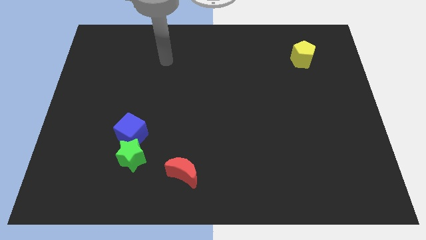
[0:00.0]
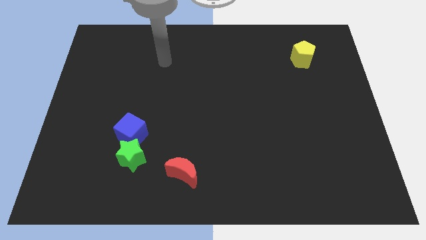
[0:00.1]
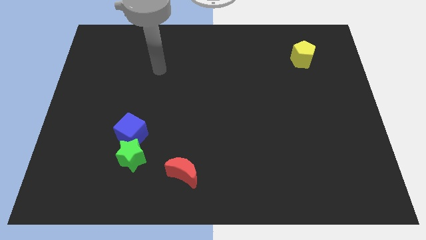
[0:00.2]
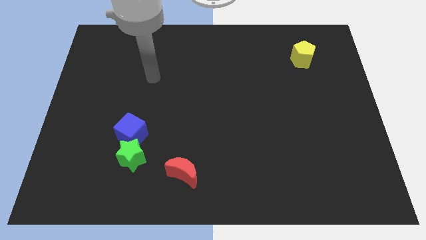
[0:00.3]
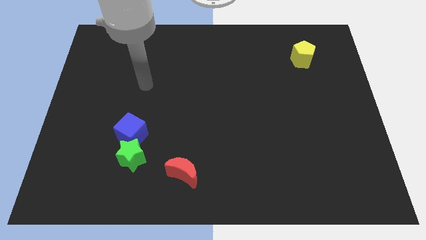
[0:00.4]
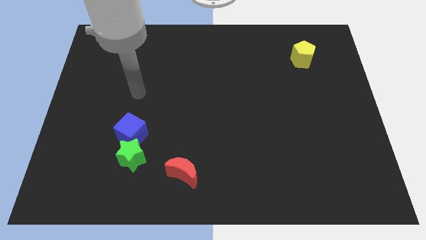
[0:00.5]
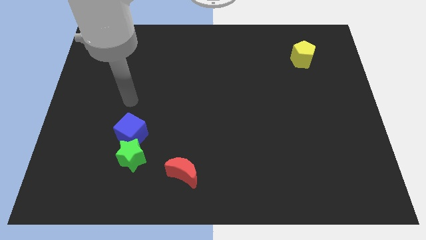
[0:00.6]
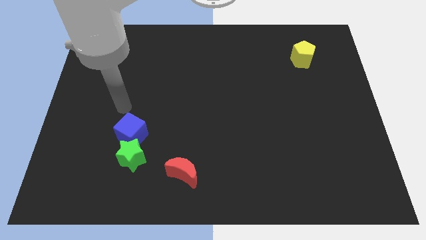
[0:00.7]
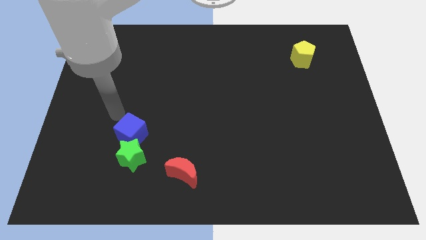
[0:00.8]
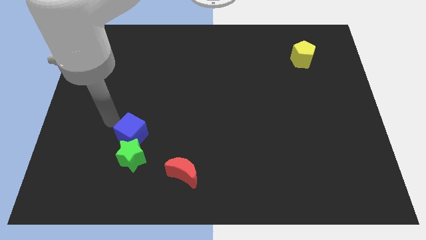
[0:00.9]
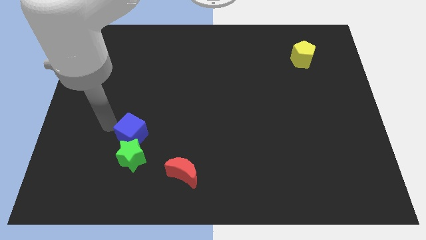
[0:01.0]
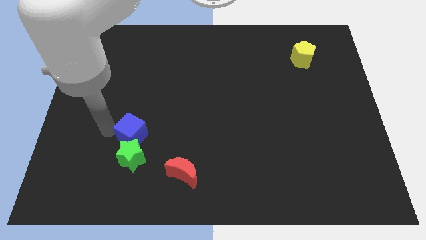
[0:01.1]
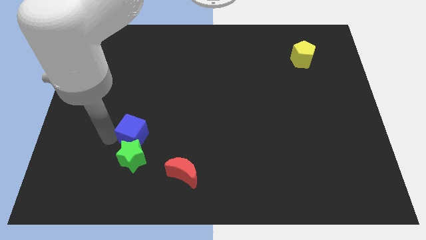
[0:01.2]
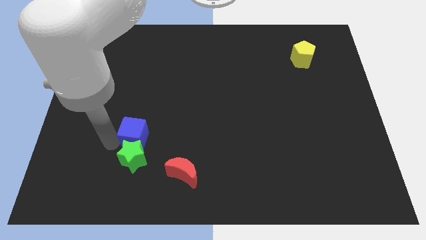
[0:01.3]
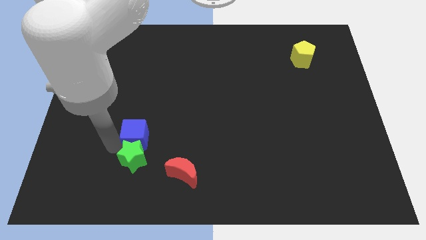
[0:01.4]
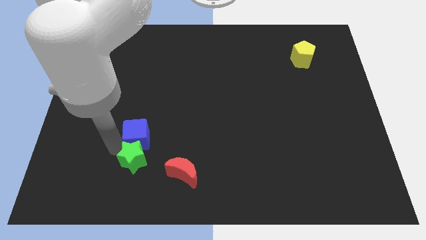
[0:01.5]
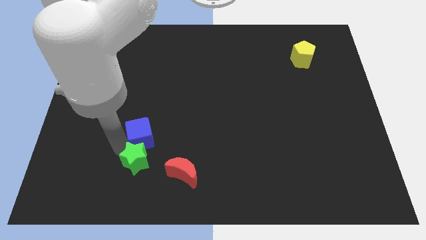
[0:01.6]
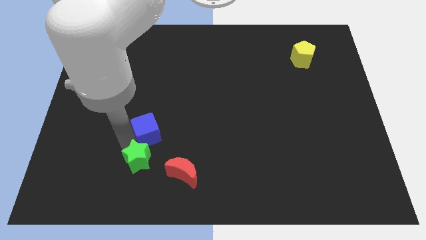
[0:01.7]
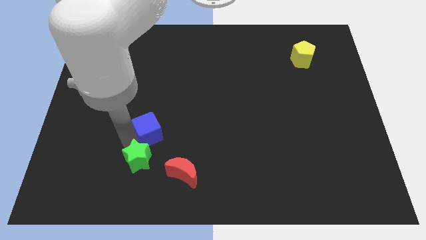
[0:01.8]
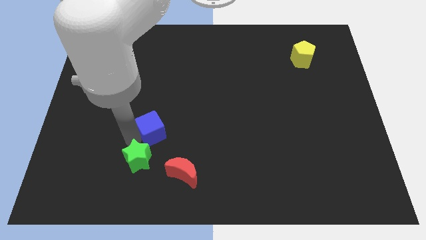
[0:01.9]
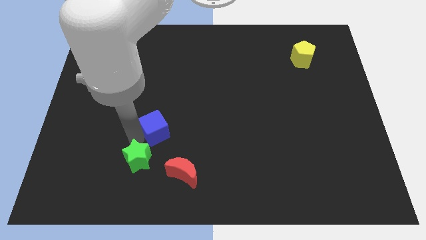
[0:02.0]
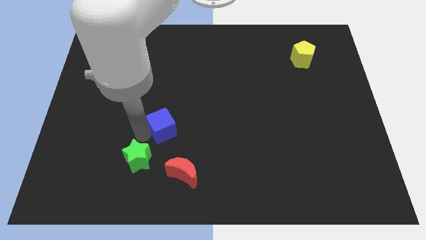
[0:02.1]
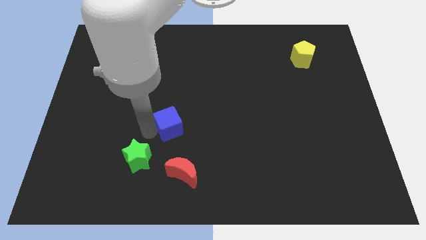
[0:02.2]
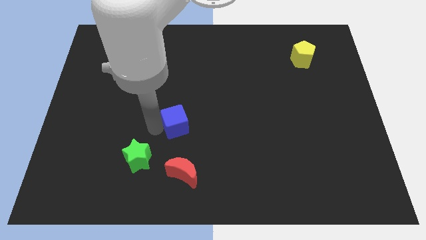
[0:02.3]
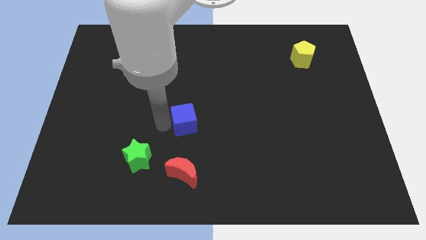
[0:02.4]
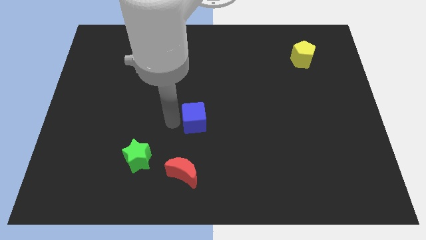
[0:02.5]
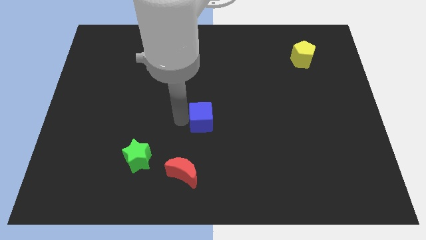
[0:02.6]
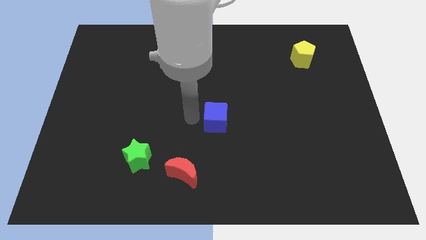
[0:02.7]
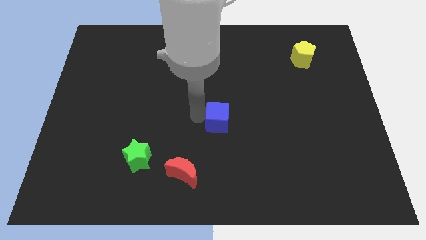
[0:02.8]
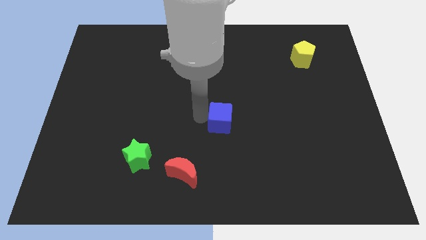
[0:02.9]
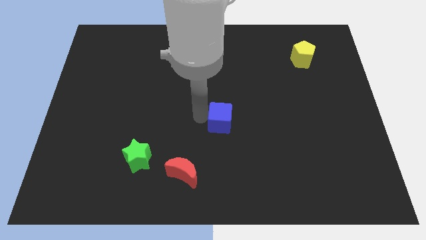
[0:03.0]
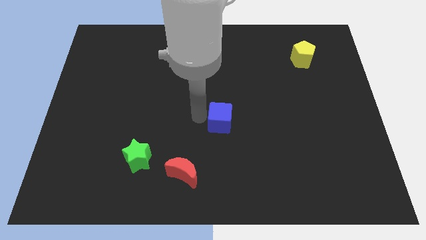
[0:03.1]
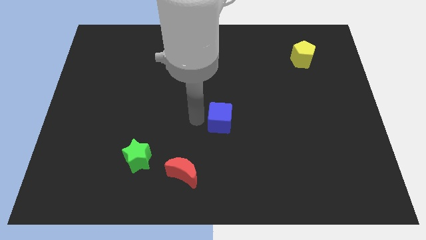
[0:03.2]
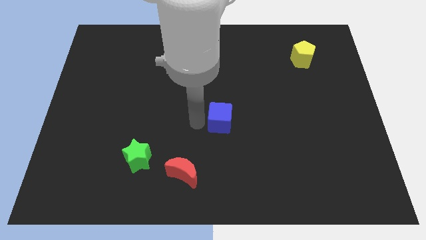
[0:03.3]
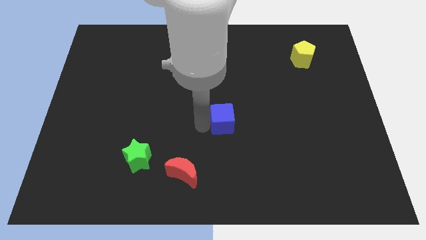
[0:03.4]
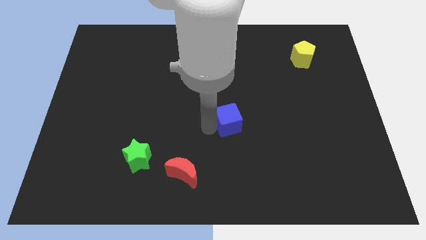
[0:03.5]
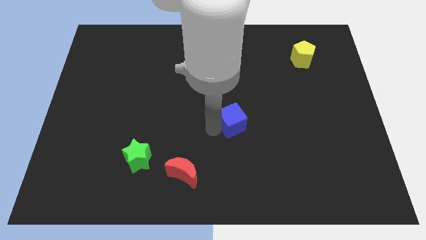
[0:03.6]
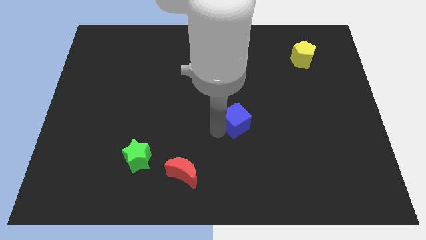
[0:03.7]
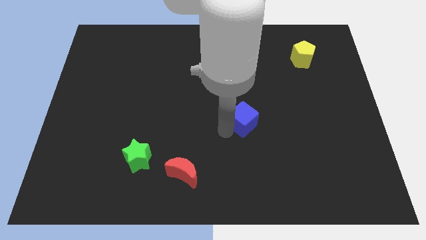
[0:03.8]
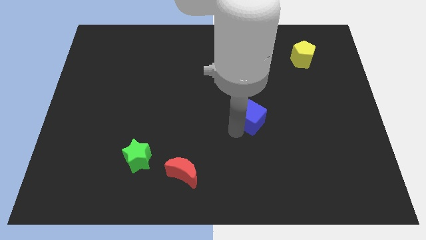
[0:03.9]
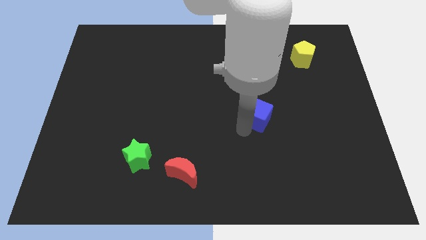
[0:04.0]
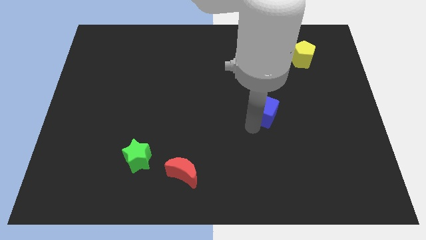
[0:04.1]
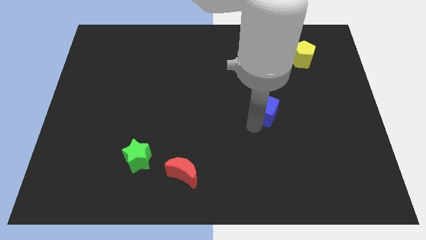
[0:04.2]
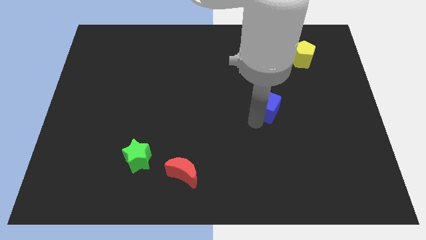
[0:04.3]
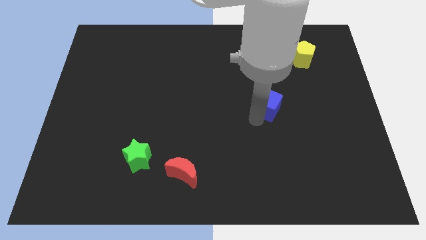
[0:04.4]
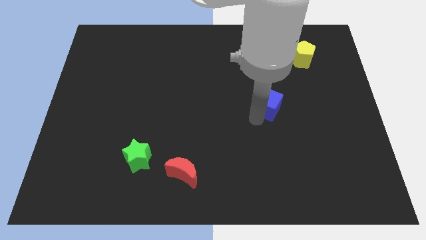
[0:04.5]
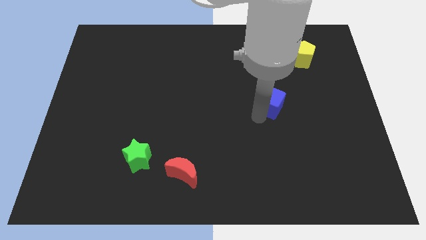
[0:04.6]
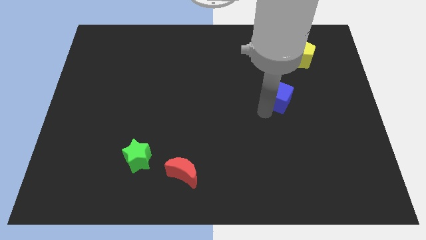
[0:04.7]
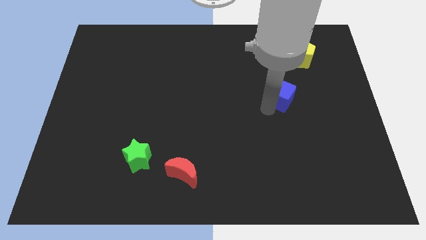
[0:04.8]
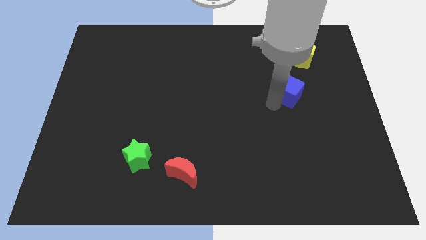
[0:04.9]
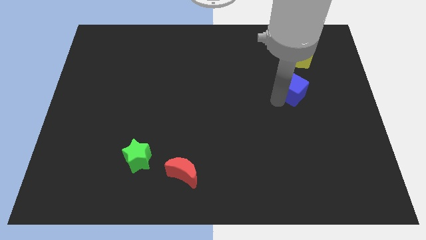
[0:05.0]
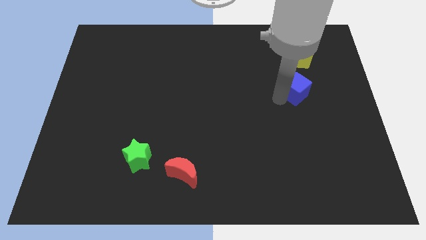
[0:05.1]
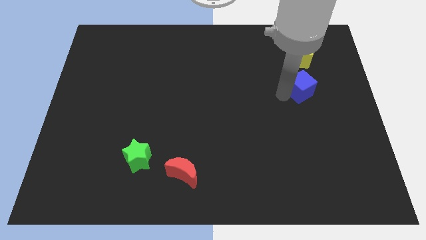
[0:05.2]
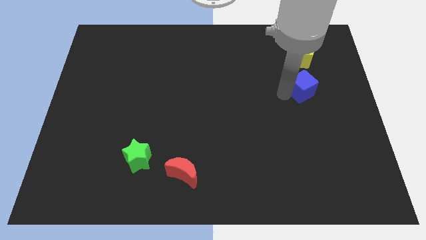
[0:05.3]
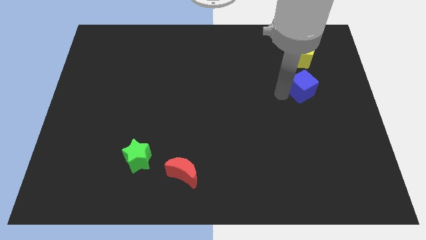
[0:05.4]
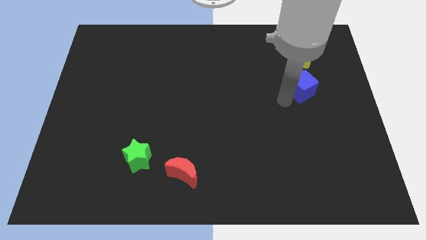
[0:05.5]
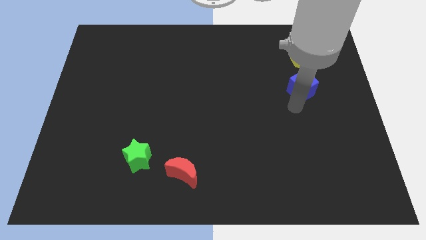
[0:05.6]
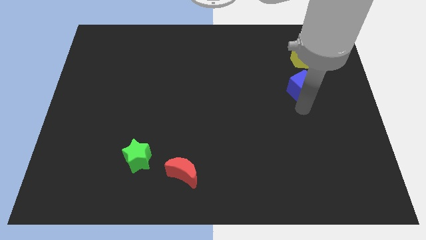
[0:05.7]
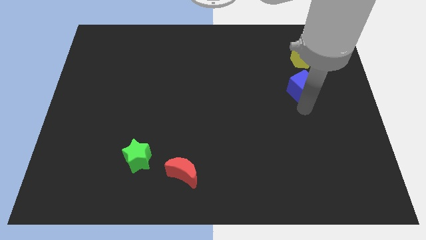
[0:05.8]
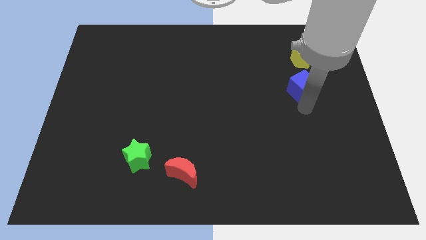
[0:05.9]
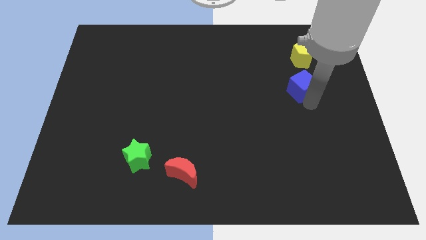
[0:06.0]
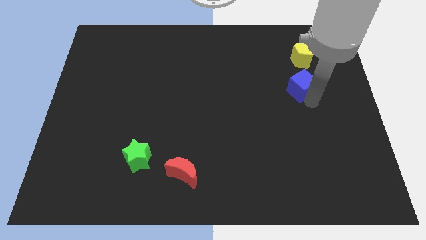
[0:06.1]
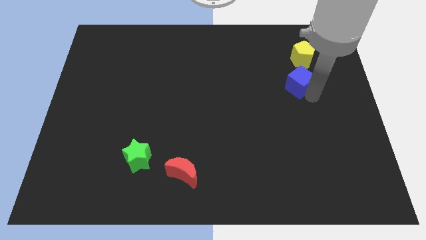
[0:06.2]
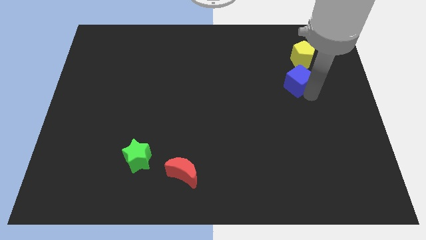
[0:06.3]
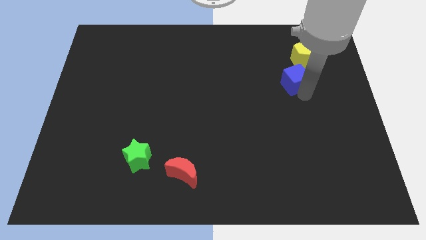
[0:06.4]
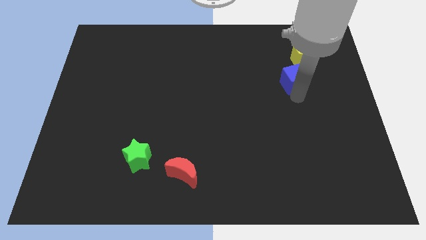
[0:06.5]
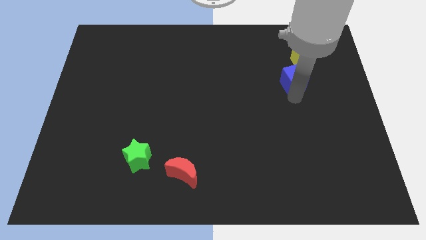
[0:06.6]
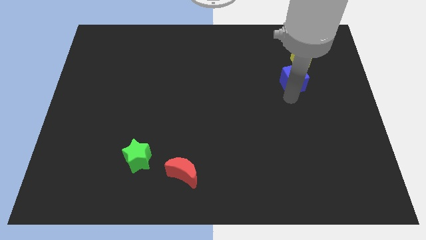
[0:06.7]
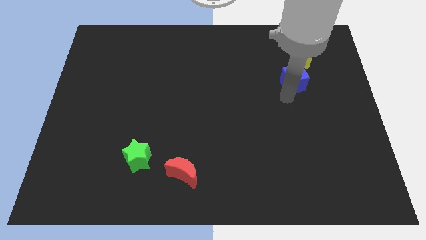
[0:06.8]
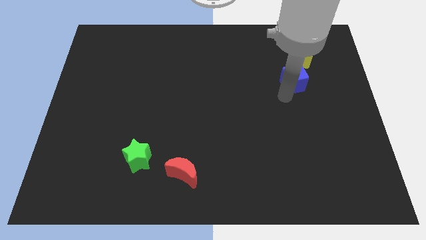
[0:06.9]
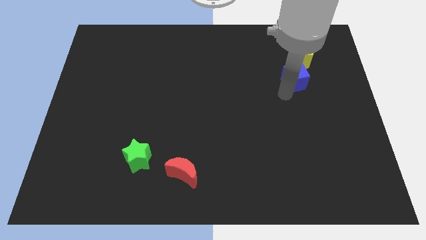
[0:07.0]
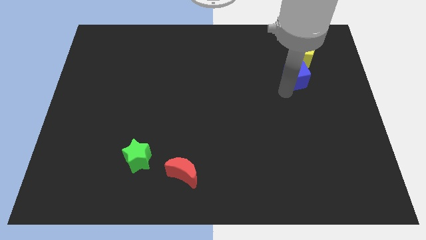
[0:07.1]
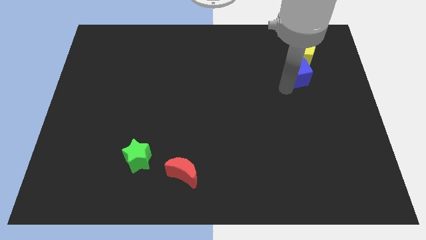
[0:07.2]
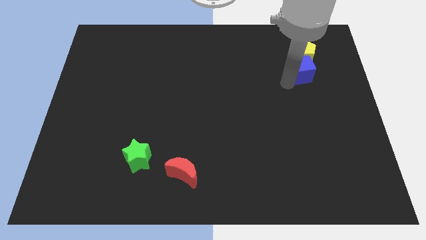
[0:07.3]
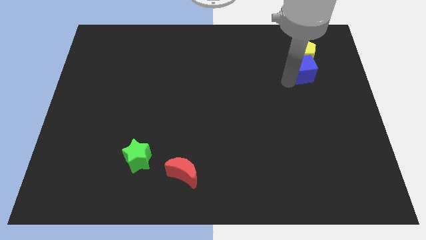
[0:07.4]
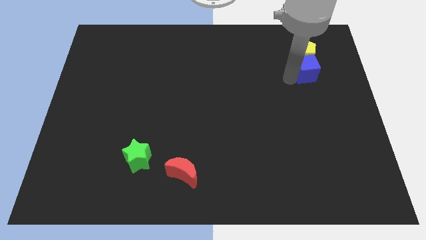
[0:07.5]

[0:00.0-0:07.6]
push the cube close to the yellow block

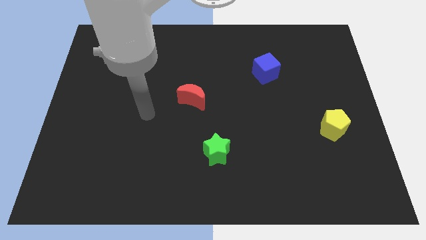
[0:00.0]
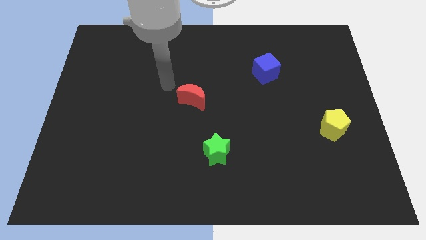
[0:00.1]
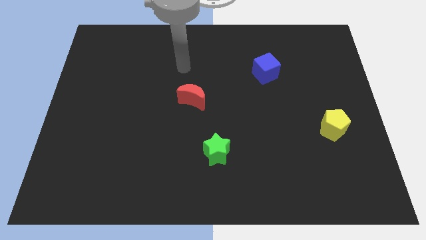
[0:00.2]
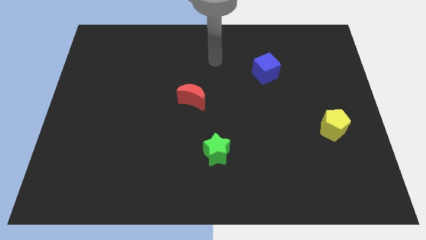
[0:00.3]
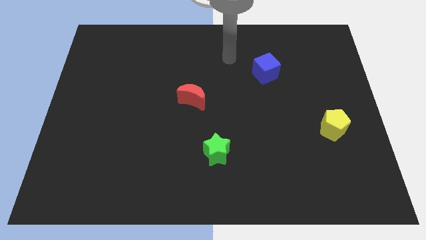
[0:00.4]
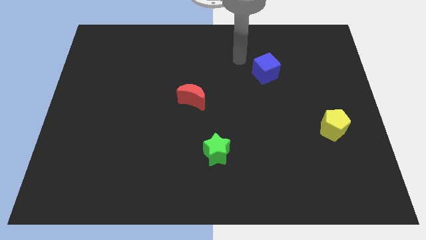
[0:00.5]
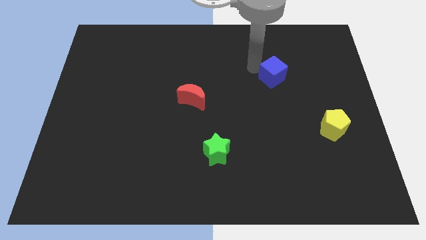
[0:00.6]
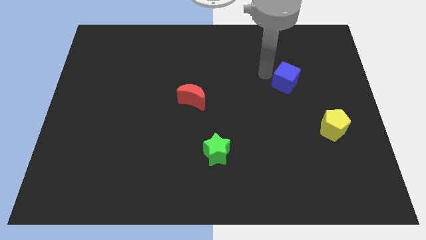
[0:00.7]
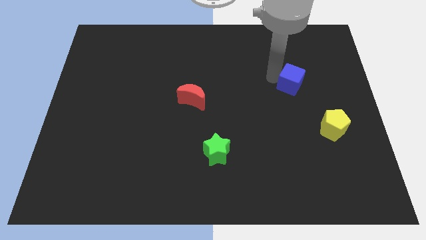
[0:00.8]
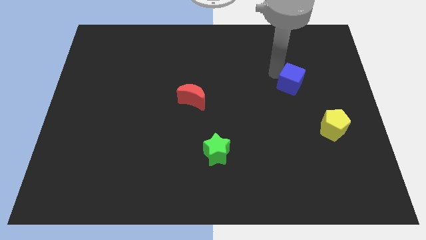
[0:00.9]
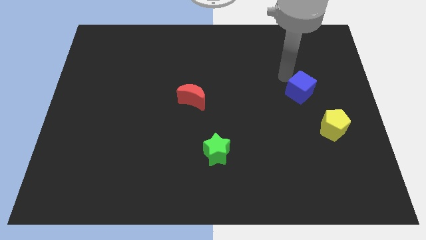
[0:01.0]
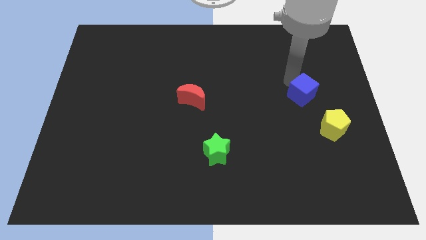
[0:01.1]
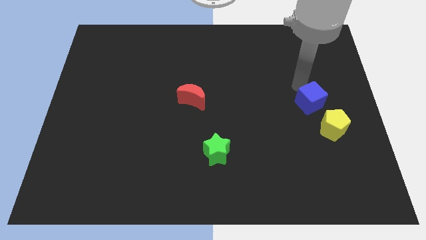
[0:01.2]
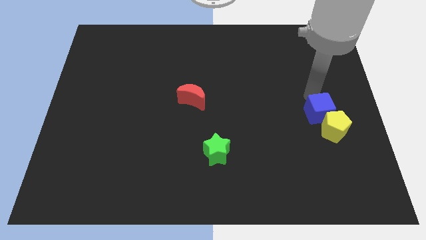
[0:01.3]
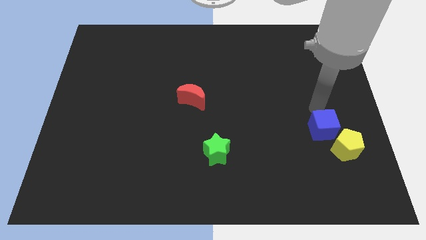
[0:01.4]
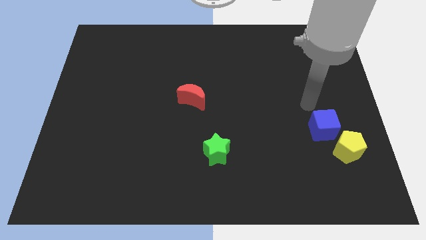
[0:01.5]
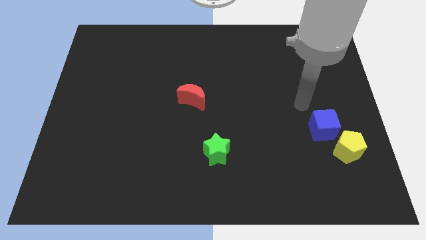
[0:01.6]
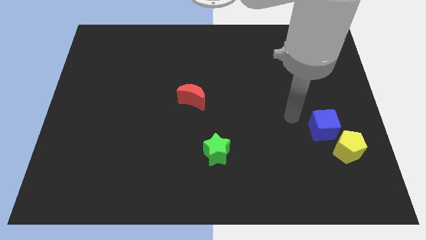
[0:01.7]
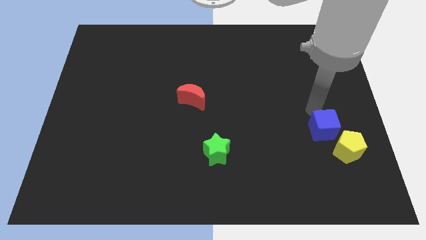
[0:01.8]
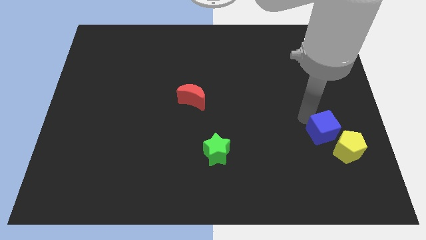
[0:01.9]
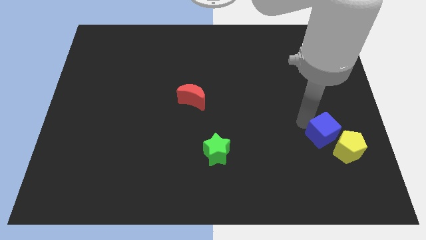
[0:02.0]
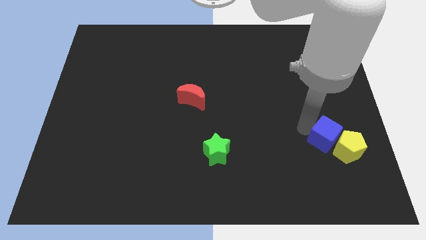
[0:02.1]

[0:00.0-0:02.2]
slide the blue block to the pentagon
